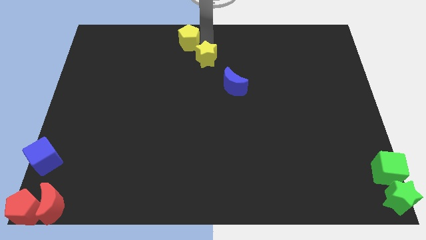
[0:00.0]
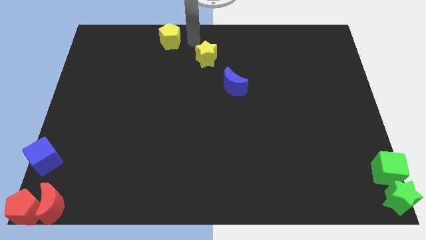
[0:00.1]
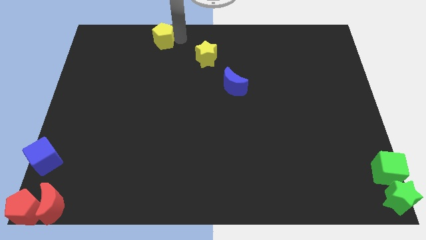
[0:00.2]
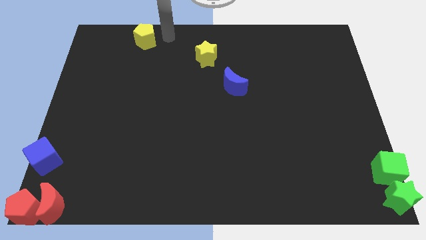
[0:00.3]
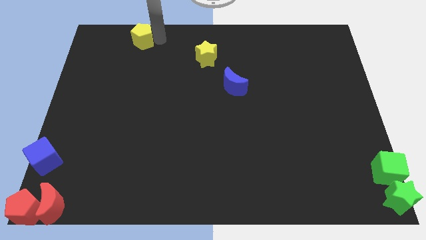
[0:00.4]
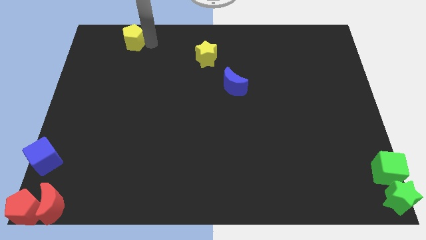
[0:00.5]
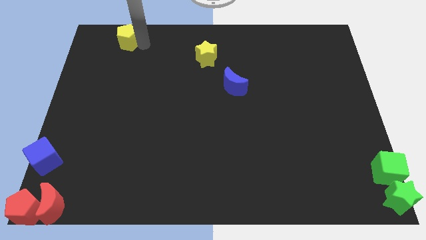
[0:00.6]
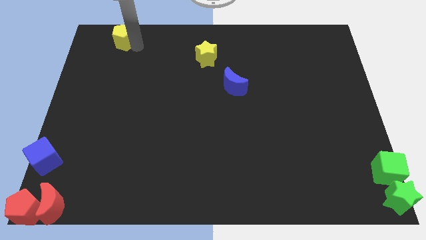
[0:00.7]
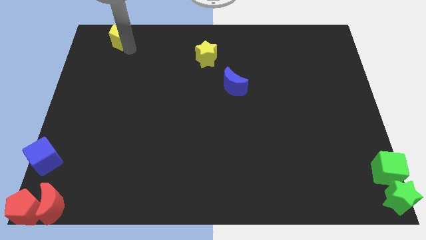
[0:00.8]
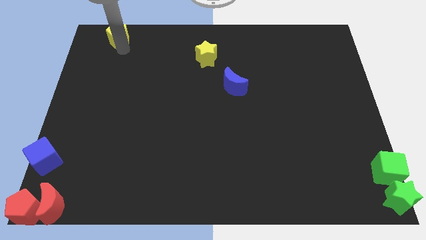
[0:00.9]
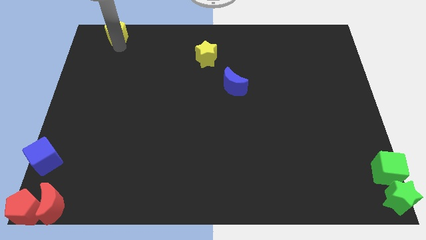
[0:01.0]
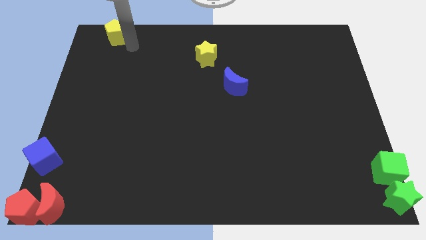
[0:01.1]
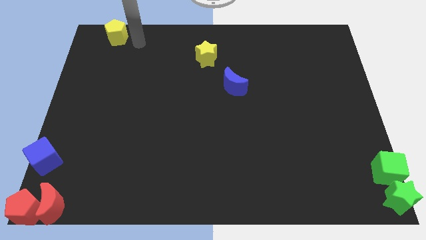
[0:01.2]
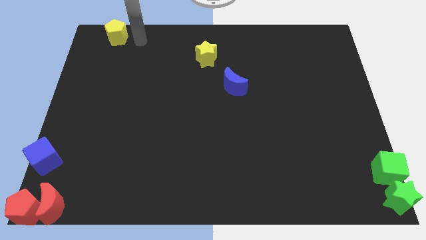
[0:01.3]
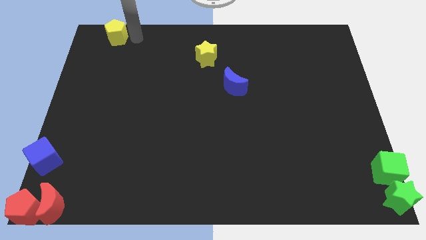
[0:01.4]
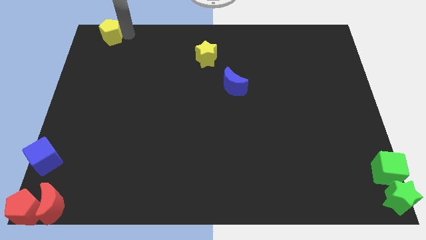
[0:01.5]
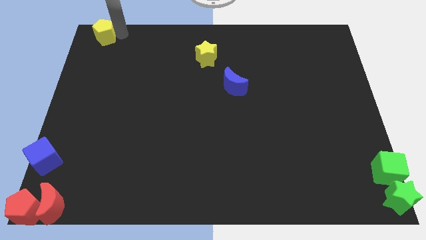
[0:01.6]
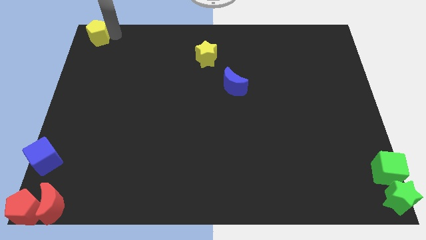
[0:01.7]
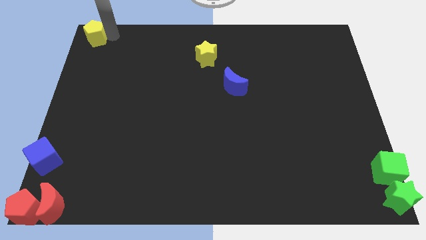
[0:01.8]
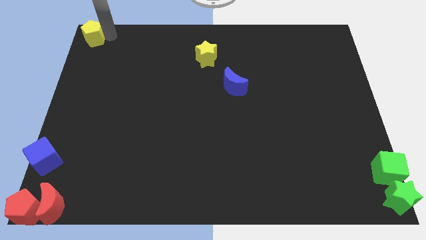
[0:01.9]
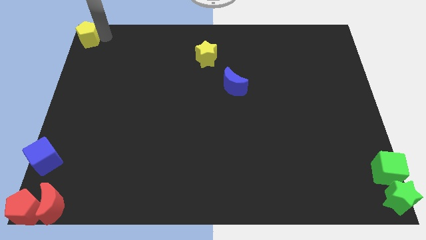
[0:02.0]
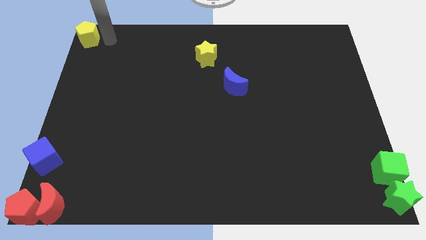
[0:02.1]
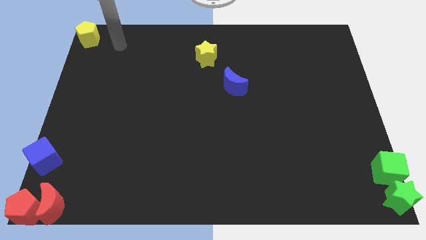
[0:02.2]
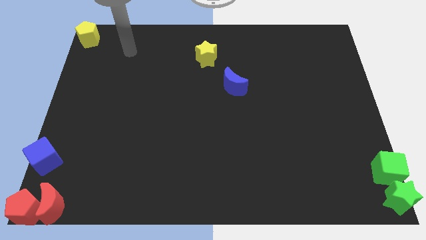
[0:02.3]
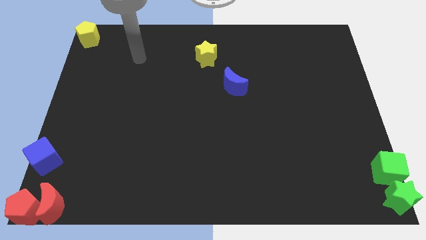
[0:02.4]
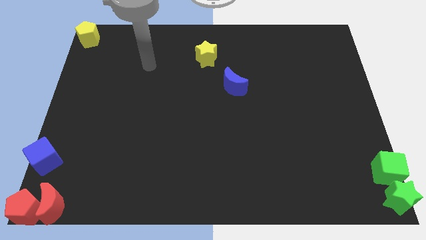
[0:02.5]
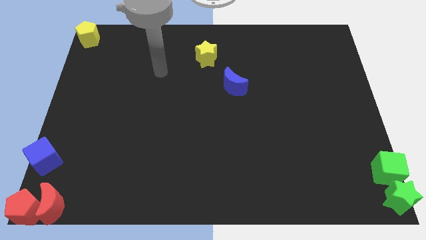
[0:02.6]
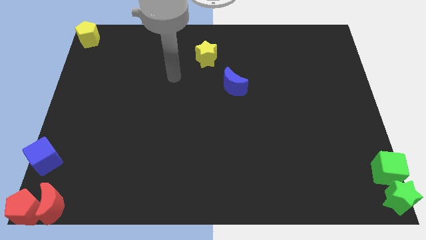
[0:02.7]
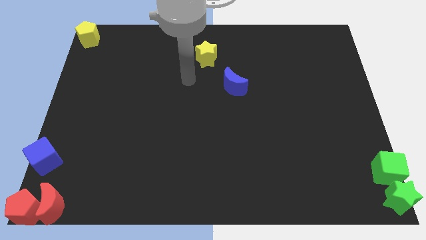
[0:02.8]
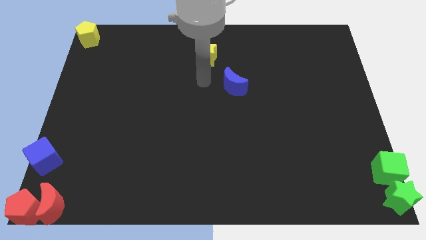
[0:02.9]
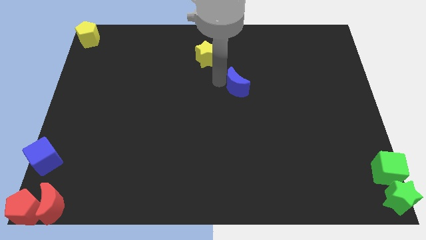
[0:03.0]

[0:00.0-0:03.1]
push the yellow pentagon to the top left corner of the board

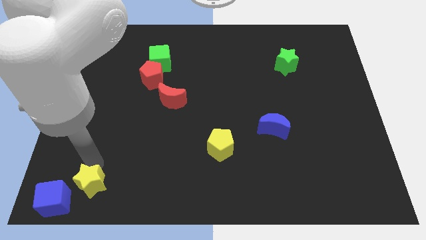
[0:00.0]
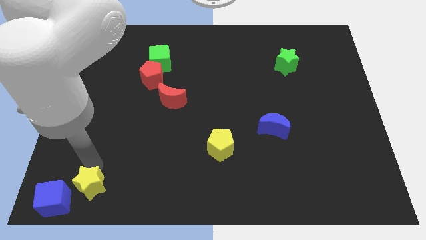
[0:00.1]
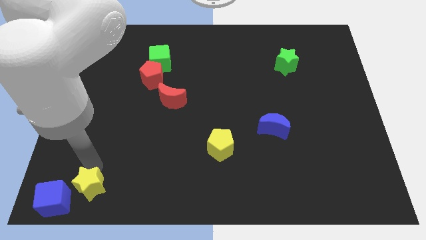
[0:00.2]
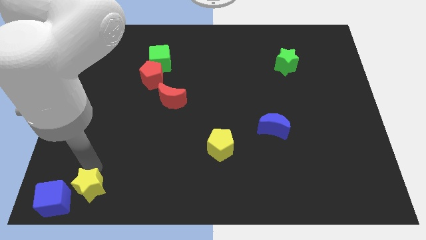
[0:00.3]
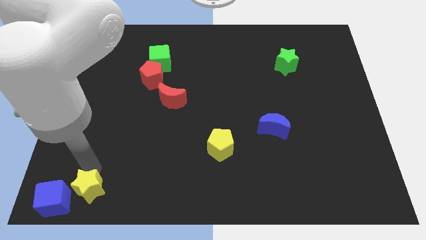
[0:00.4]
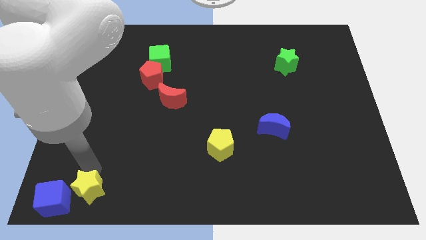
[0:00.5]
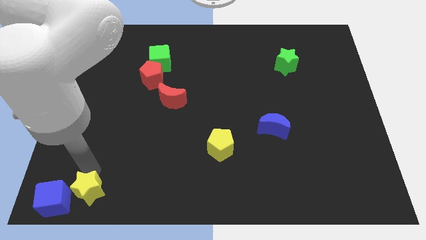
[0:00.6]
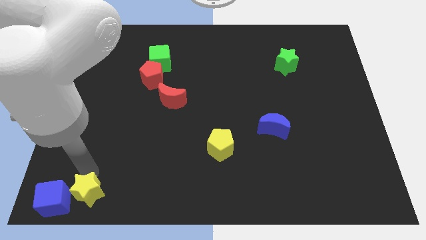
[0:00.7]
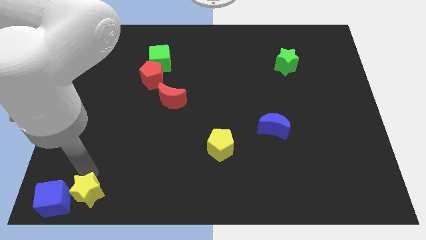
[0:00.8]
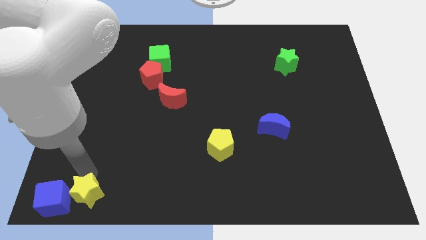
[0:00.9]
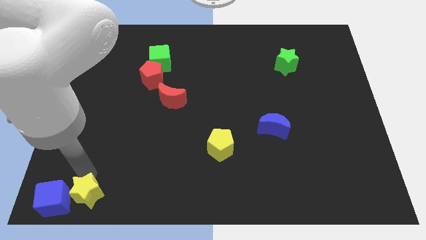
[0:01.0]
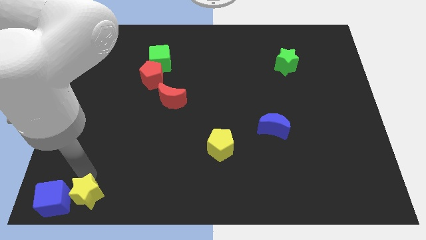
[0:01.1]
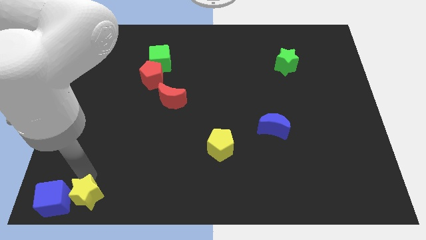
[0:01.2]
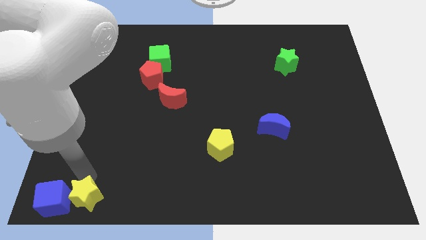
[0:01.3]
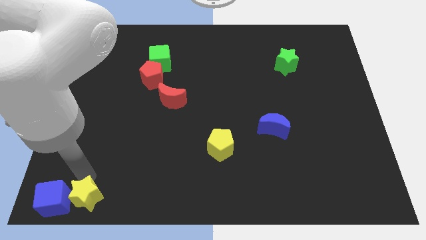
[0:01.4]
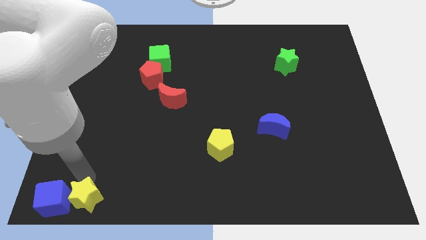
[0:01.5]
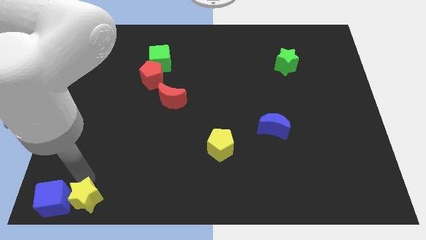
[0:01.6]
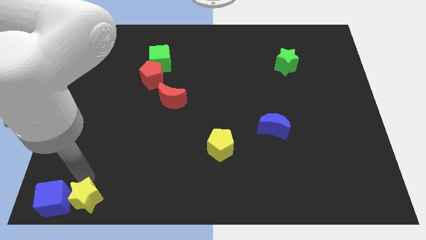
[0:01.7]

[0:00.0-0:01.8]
move the yellow star to the right of the blue cube

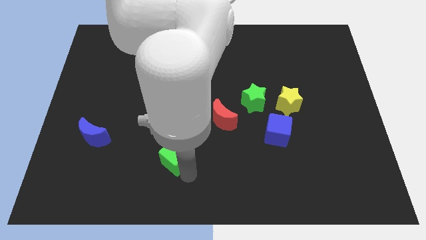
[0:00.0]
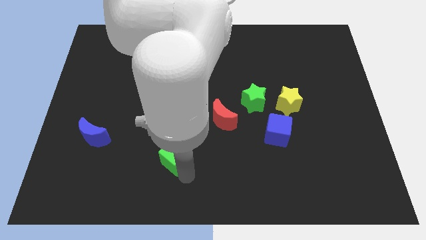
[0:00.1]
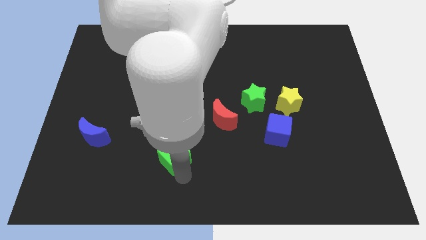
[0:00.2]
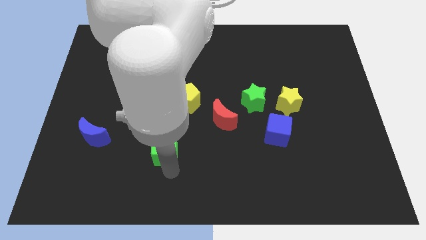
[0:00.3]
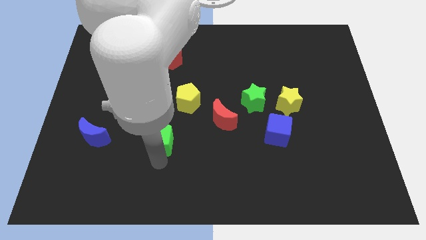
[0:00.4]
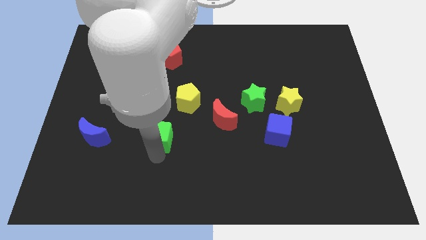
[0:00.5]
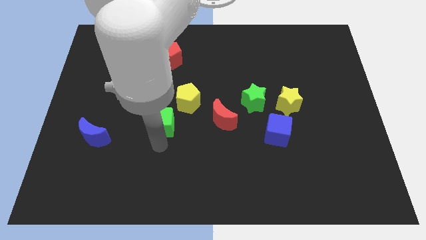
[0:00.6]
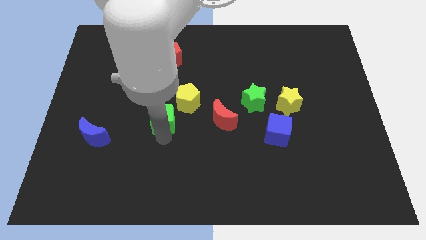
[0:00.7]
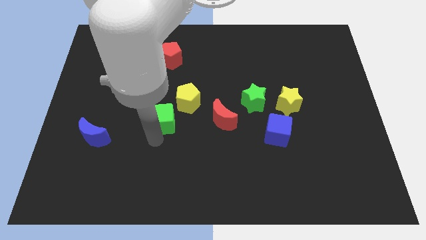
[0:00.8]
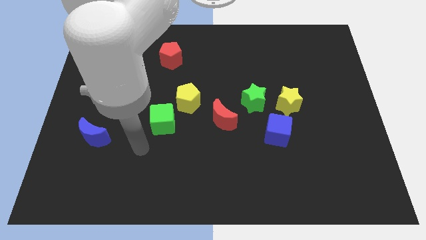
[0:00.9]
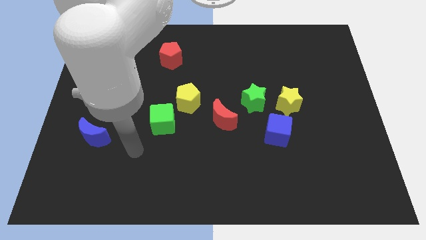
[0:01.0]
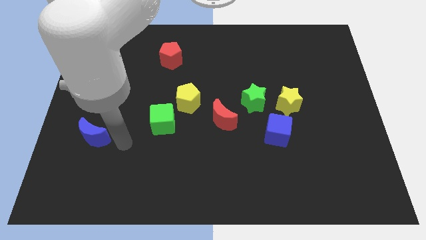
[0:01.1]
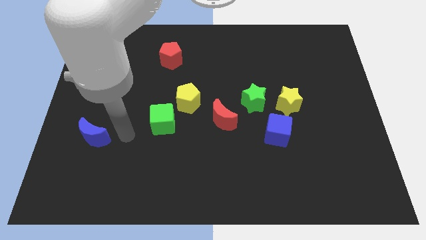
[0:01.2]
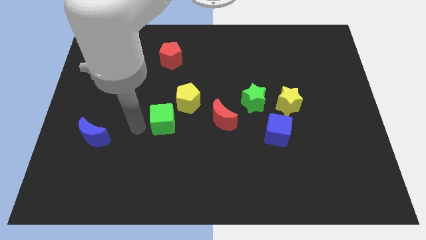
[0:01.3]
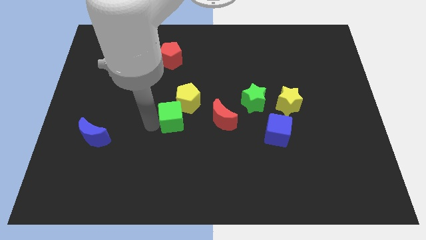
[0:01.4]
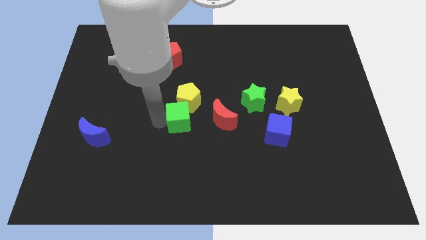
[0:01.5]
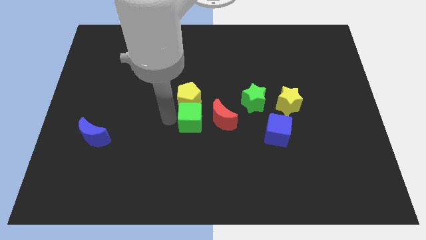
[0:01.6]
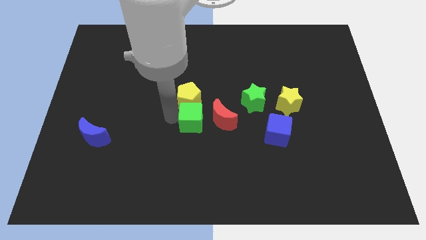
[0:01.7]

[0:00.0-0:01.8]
place the green cube below to the yellow pentagon

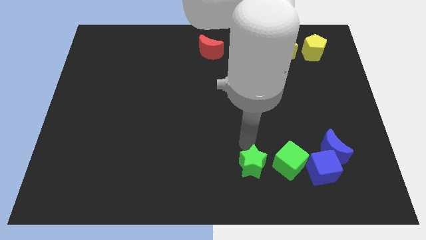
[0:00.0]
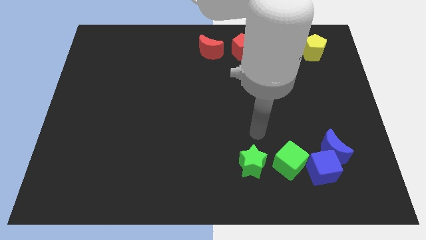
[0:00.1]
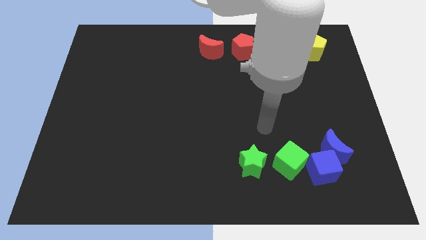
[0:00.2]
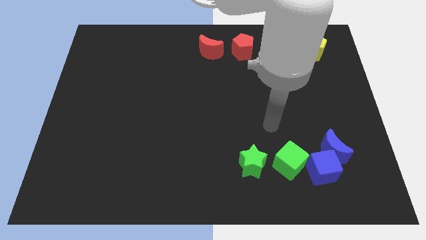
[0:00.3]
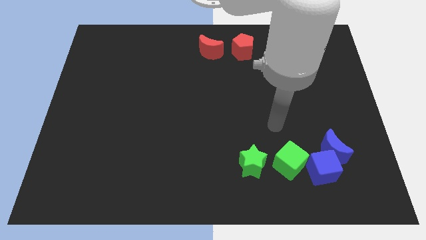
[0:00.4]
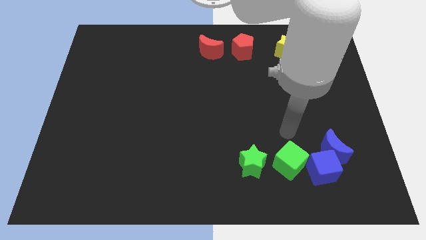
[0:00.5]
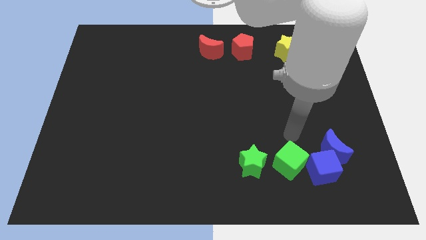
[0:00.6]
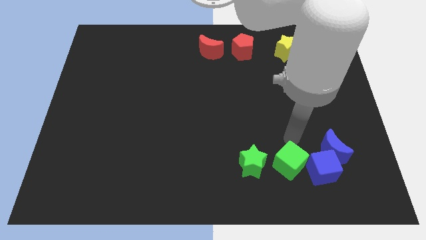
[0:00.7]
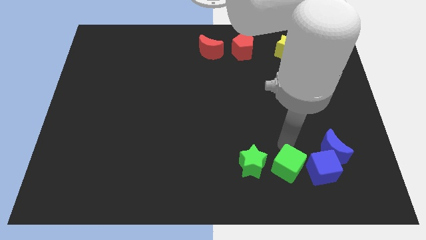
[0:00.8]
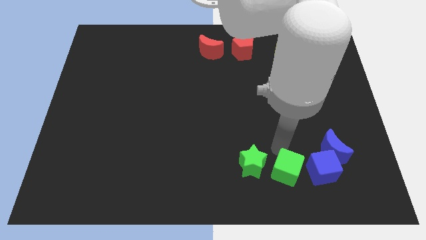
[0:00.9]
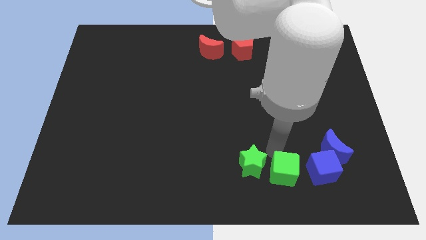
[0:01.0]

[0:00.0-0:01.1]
move the green cube slightly to the bottom

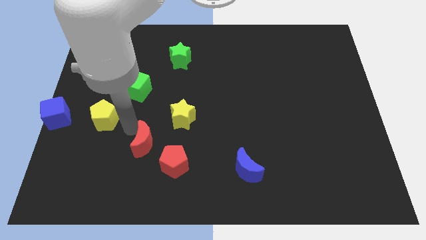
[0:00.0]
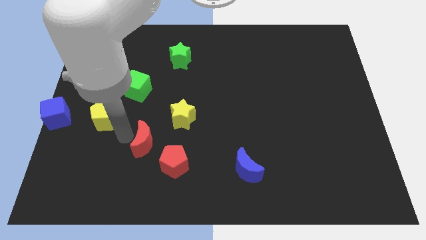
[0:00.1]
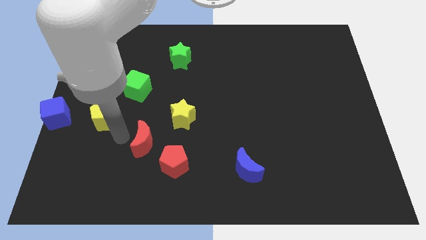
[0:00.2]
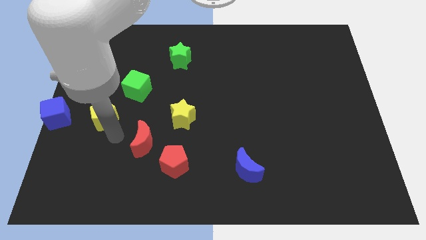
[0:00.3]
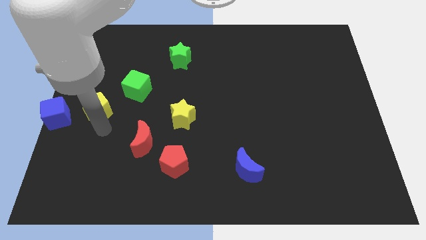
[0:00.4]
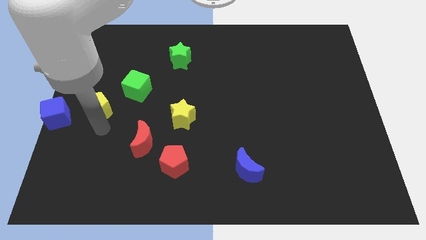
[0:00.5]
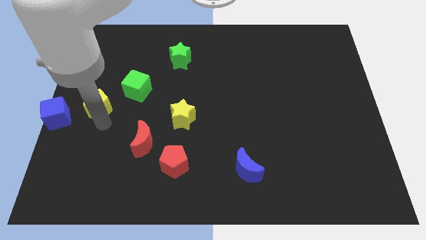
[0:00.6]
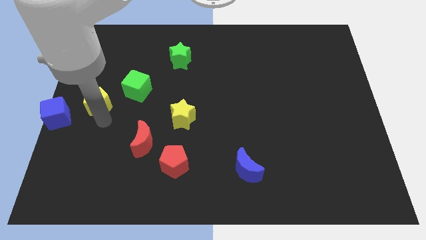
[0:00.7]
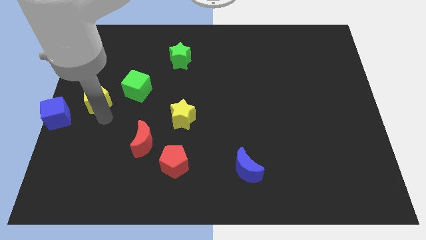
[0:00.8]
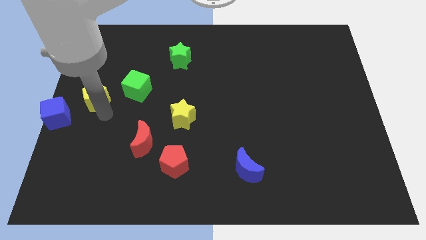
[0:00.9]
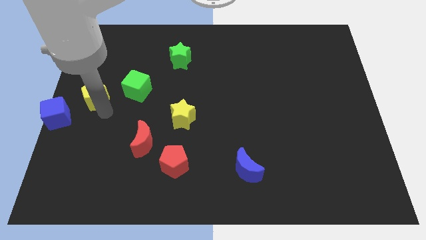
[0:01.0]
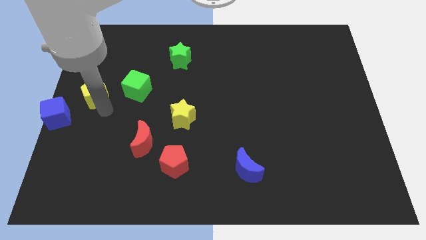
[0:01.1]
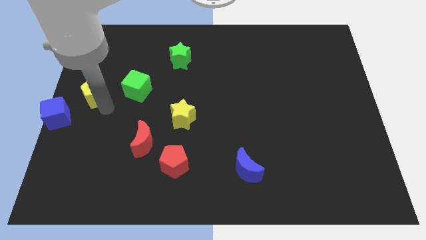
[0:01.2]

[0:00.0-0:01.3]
place yellow pentagon in between the blue and green cubes
